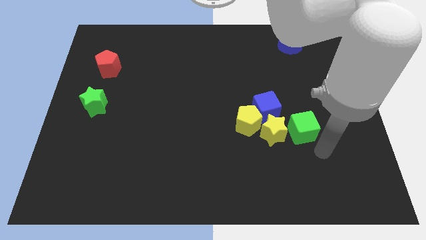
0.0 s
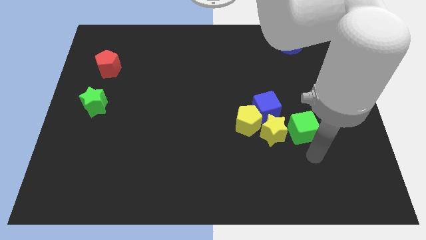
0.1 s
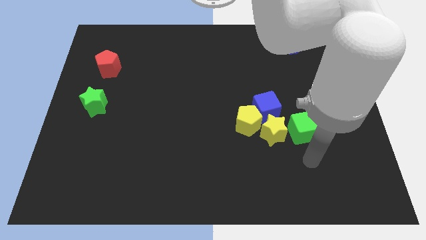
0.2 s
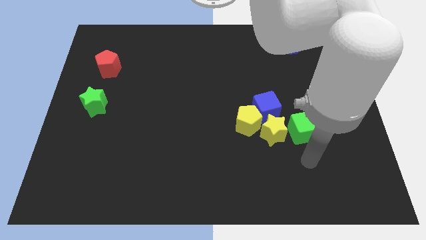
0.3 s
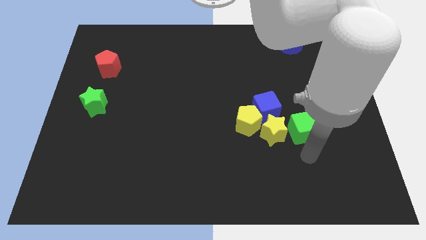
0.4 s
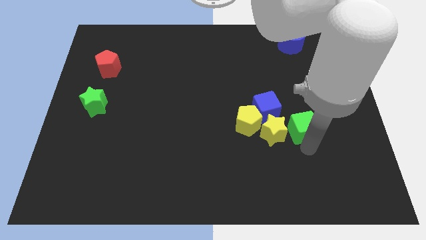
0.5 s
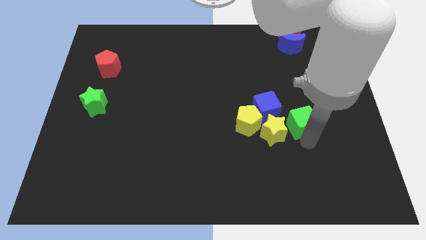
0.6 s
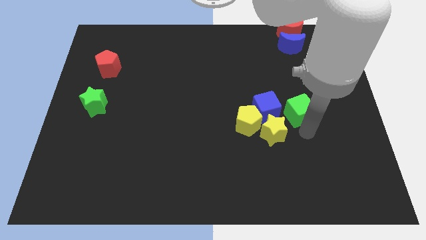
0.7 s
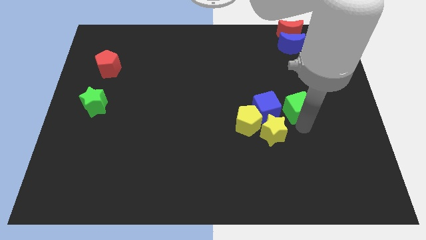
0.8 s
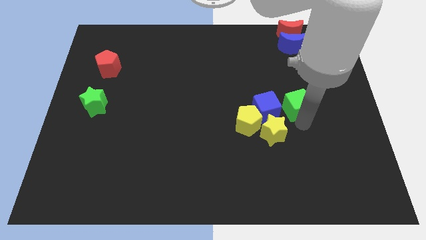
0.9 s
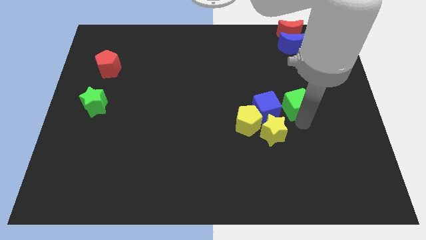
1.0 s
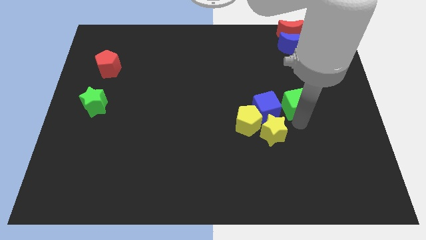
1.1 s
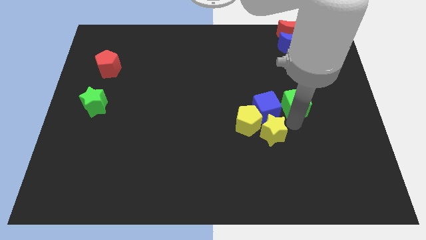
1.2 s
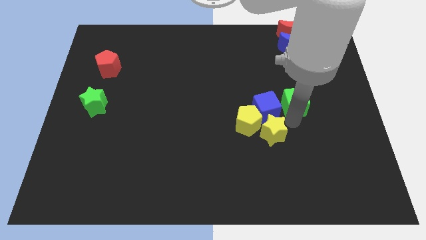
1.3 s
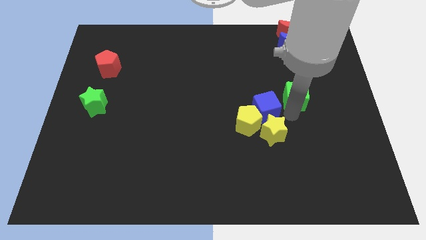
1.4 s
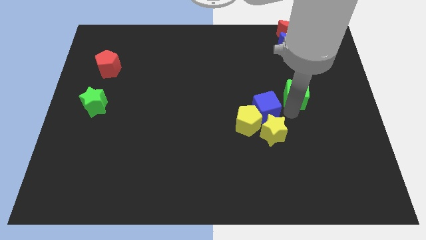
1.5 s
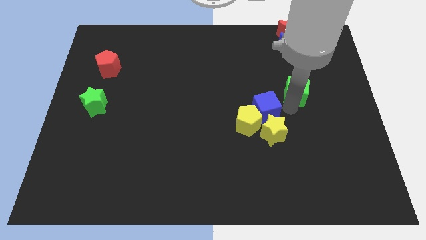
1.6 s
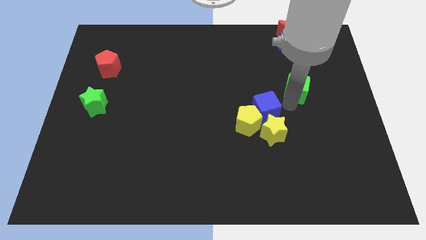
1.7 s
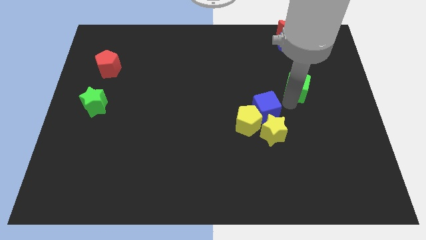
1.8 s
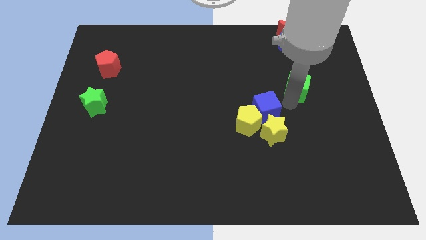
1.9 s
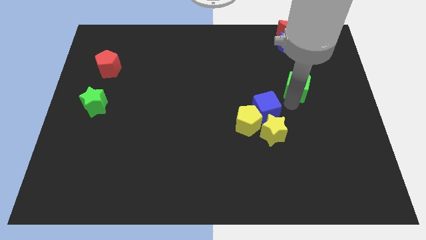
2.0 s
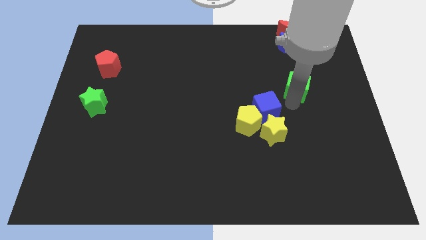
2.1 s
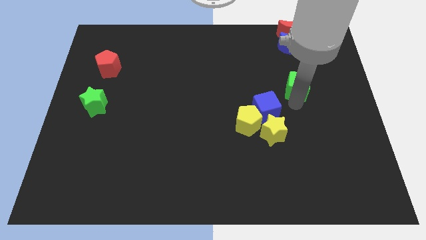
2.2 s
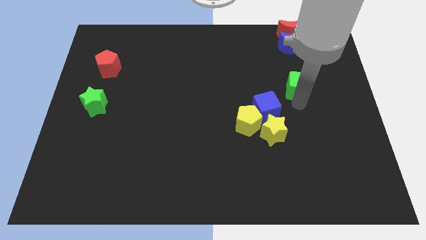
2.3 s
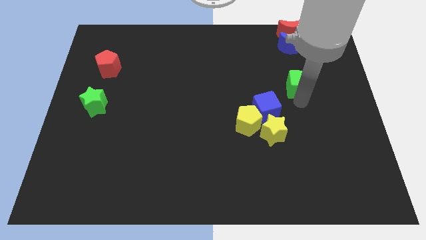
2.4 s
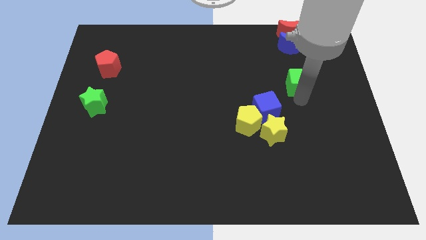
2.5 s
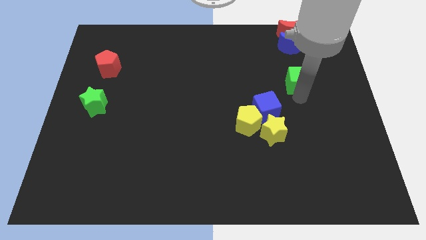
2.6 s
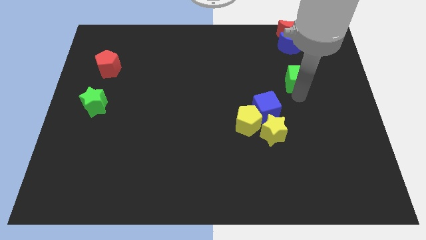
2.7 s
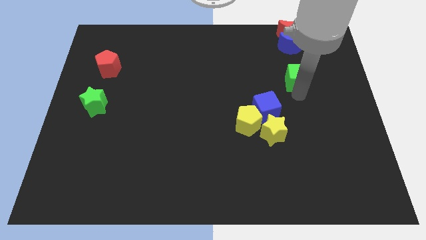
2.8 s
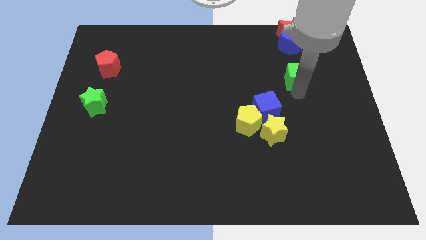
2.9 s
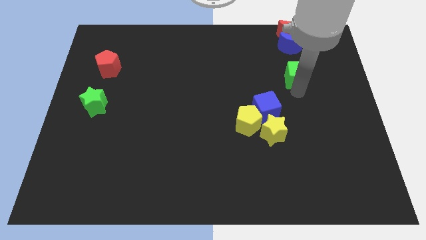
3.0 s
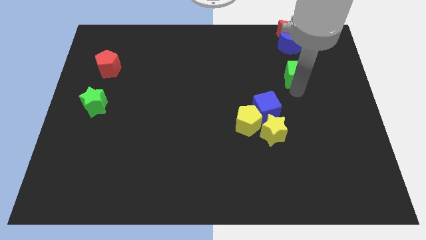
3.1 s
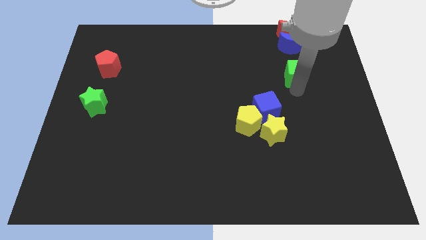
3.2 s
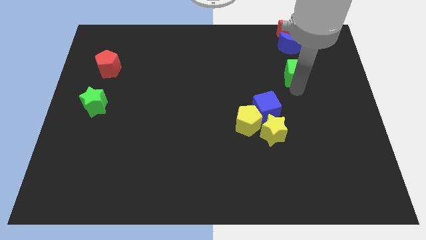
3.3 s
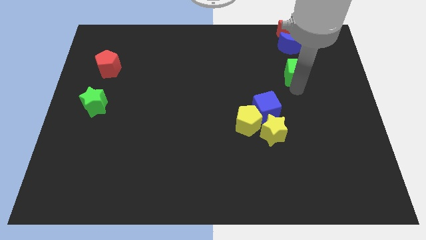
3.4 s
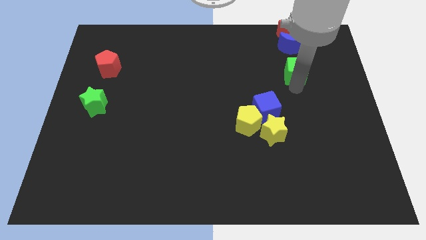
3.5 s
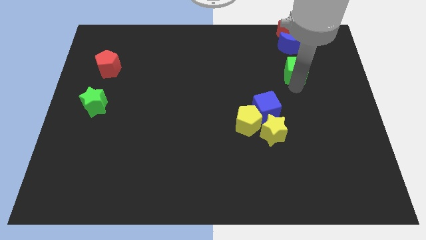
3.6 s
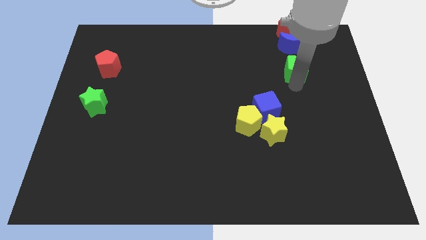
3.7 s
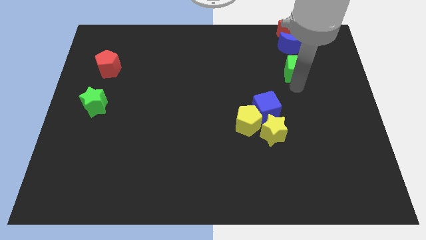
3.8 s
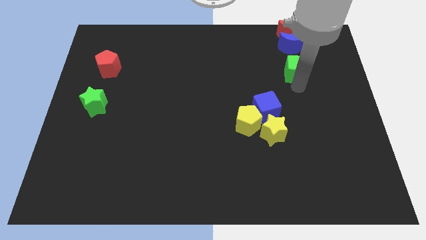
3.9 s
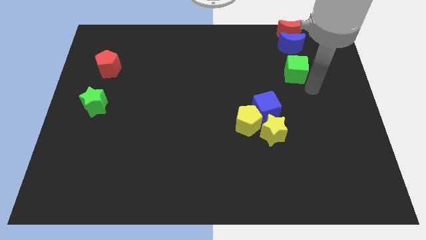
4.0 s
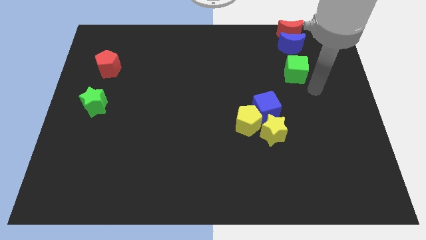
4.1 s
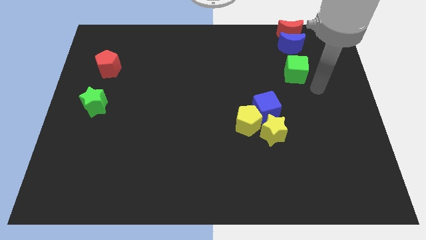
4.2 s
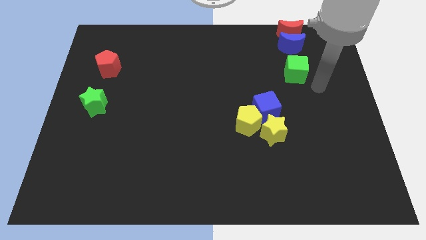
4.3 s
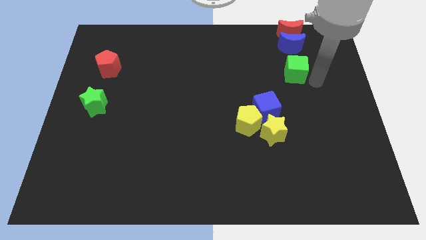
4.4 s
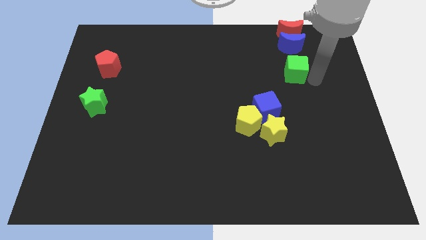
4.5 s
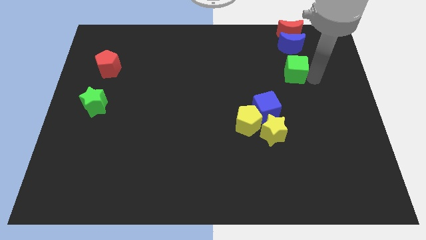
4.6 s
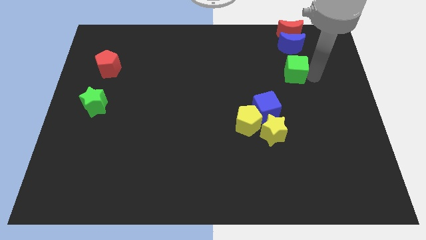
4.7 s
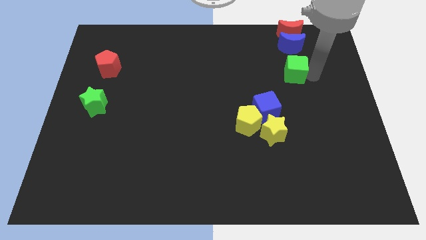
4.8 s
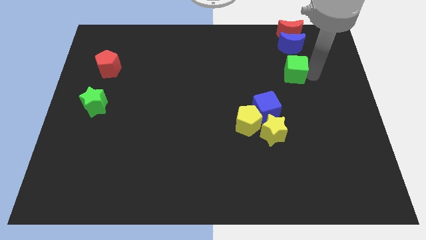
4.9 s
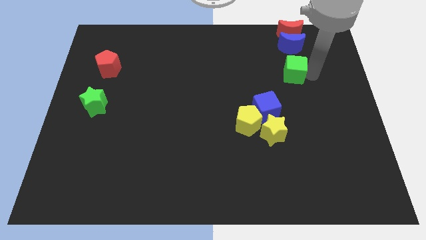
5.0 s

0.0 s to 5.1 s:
move the green cube close to the bottom of the blue crescent

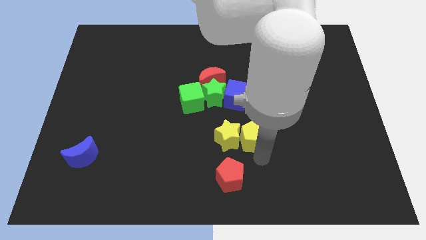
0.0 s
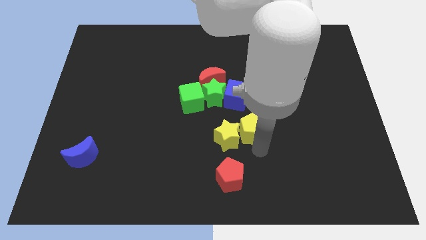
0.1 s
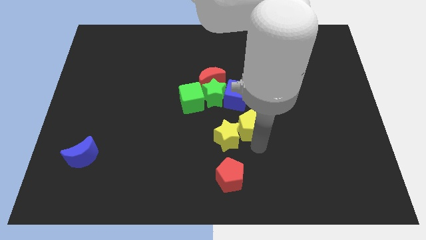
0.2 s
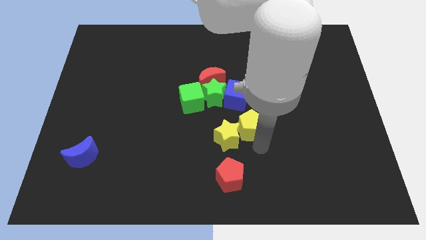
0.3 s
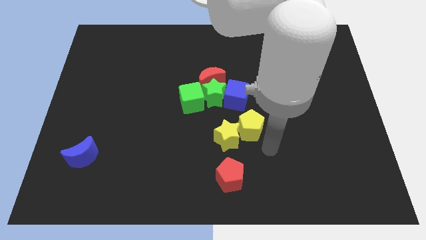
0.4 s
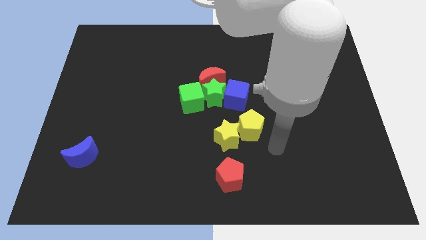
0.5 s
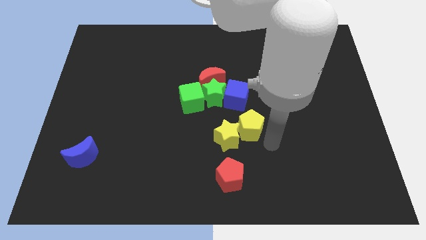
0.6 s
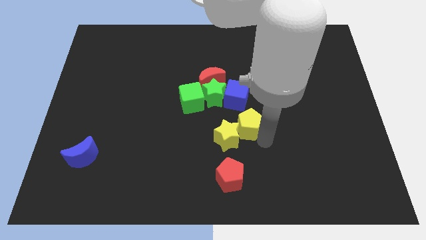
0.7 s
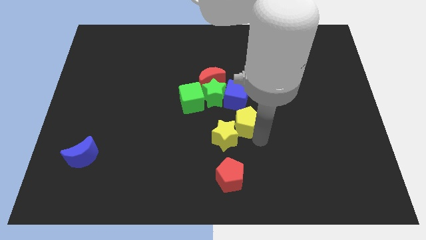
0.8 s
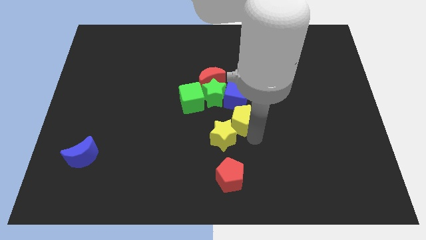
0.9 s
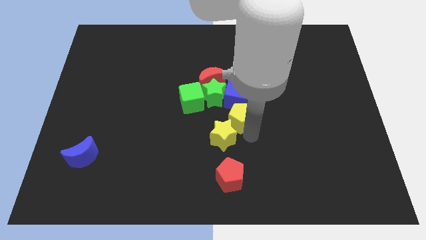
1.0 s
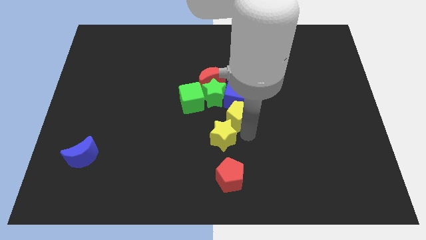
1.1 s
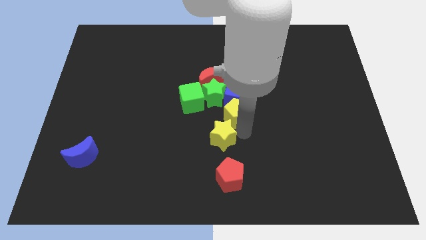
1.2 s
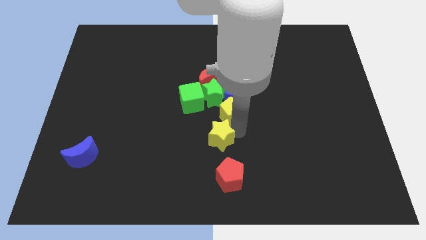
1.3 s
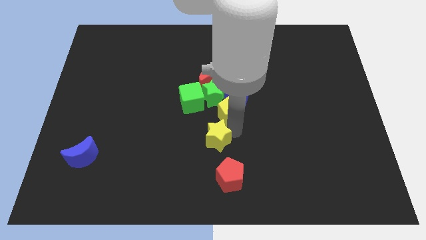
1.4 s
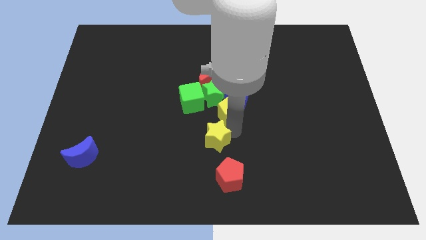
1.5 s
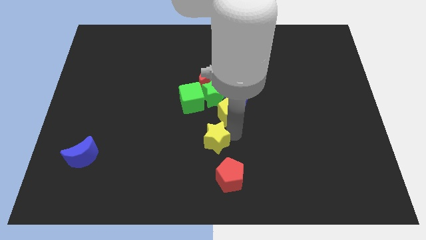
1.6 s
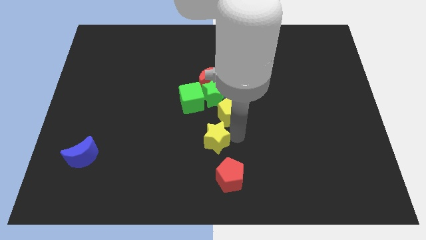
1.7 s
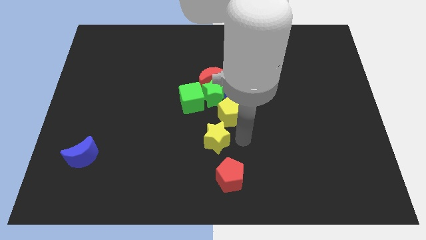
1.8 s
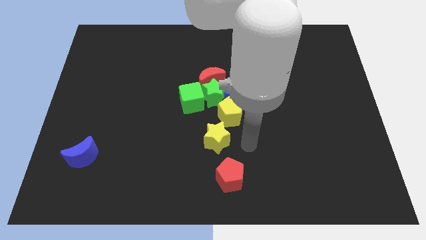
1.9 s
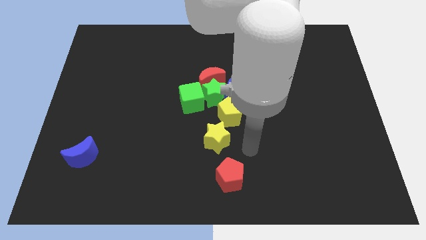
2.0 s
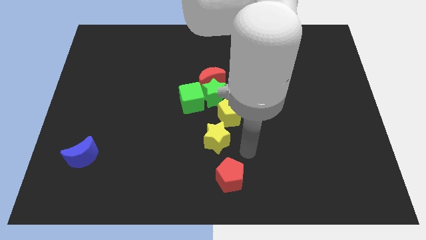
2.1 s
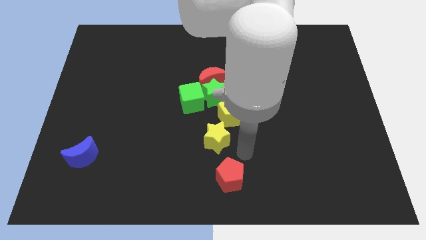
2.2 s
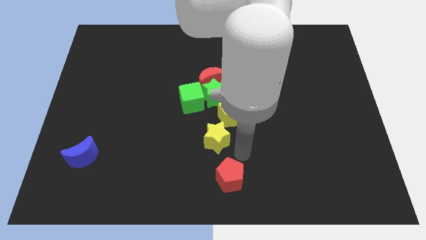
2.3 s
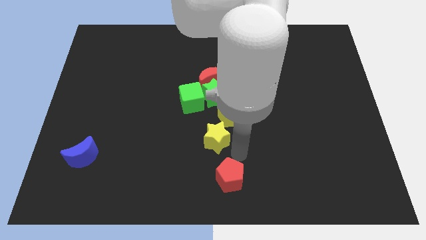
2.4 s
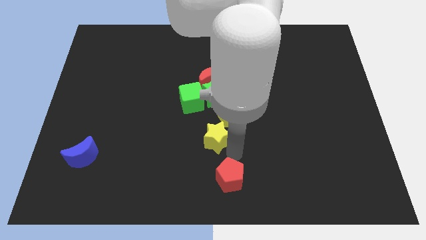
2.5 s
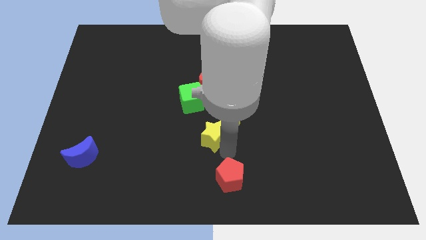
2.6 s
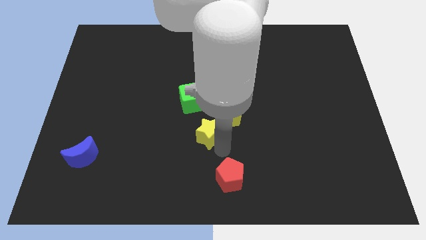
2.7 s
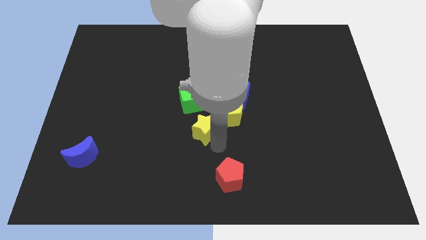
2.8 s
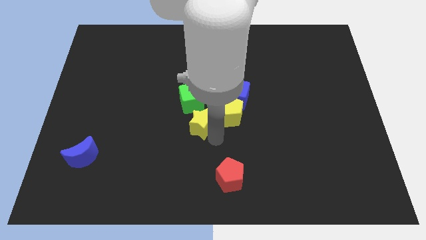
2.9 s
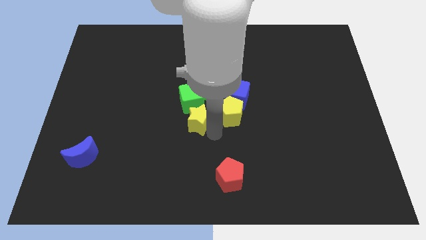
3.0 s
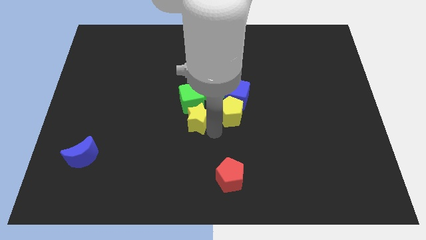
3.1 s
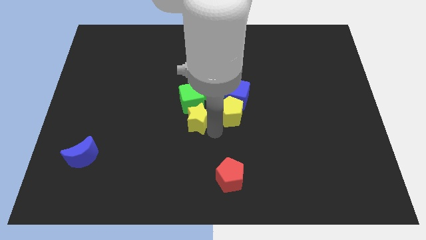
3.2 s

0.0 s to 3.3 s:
place the yellow star down to the green cube

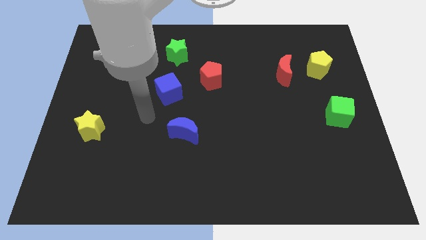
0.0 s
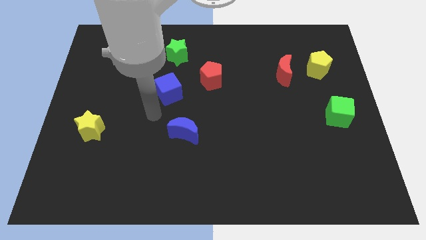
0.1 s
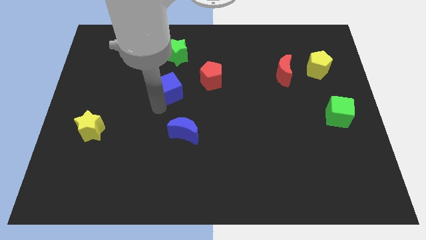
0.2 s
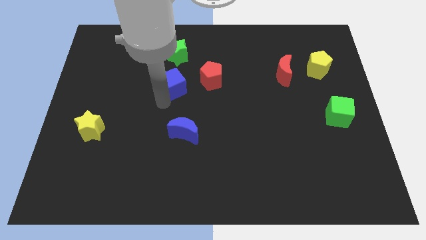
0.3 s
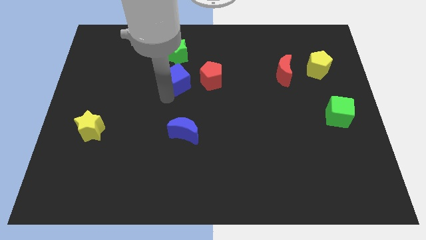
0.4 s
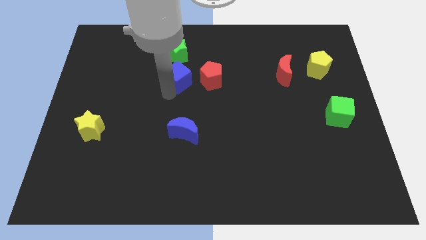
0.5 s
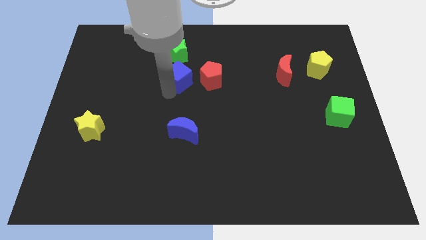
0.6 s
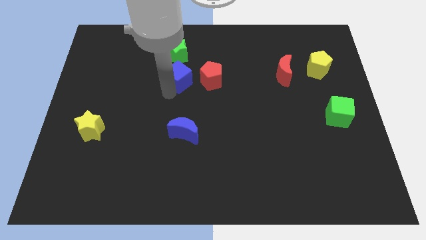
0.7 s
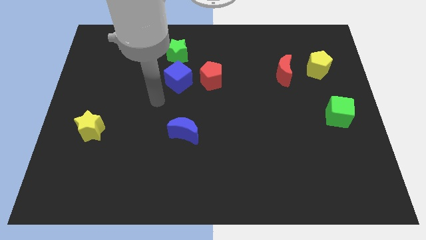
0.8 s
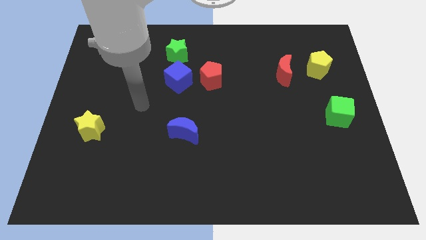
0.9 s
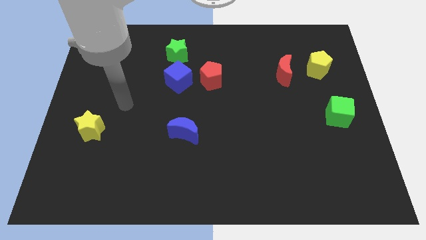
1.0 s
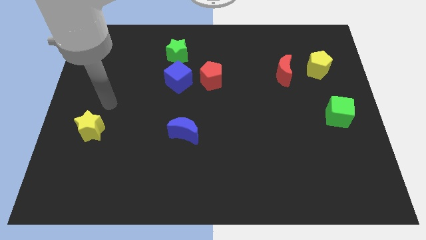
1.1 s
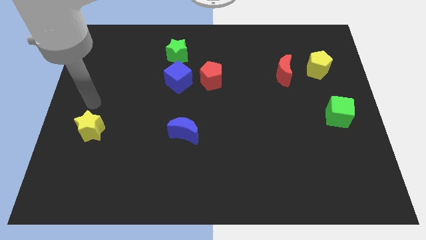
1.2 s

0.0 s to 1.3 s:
move the blue cube to the left of red pentagon
